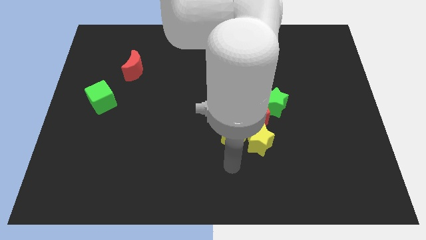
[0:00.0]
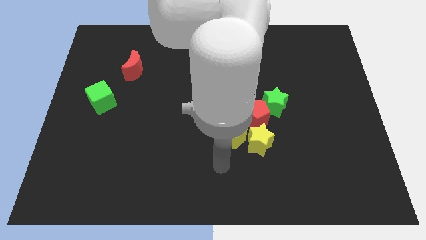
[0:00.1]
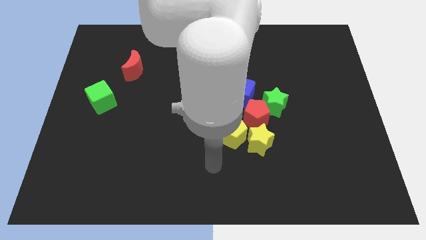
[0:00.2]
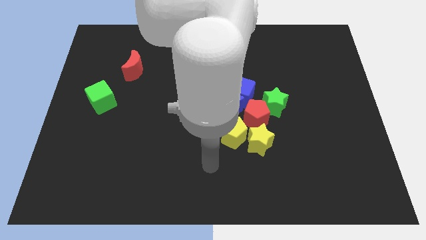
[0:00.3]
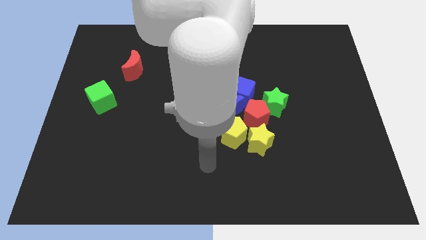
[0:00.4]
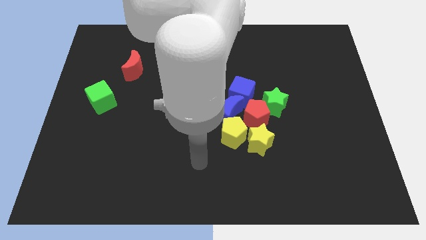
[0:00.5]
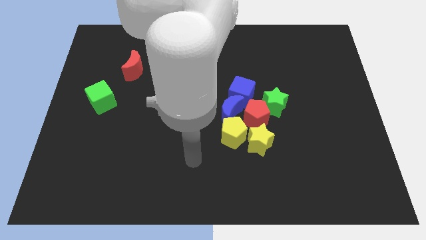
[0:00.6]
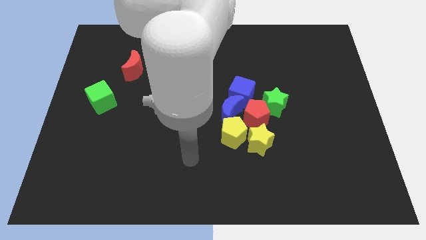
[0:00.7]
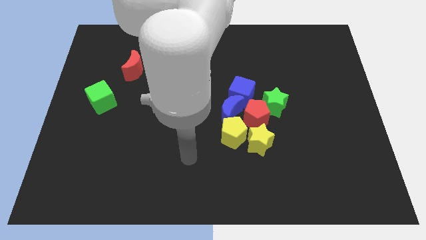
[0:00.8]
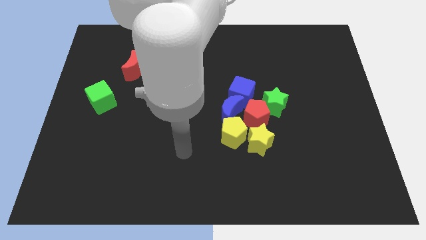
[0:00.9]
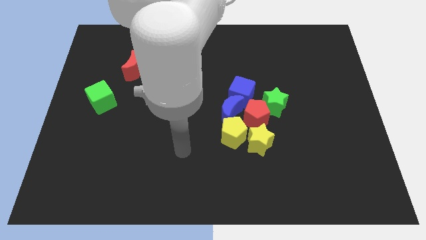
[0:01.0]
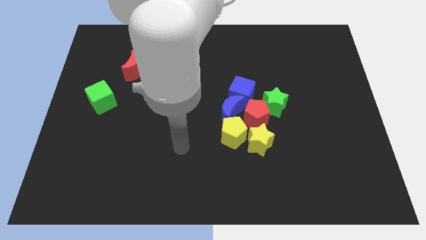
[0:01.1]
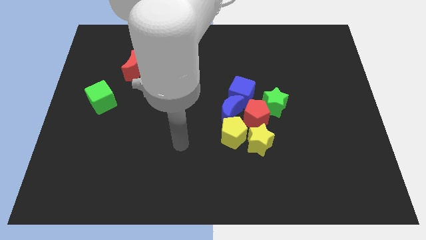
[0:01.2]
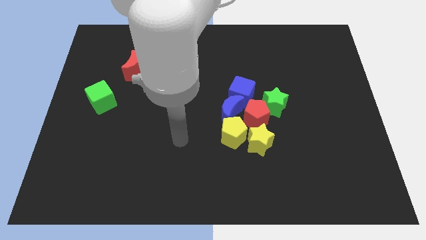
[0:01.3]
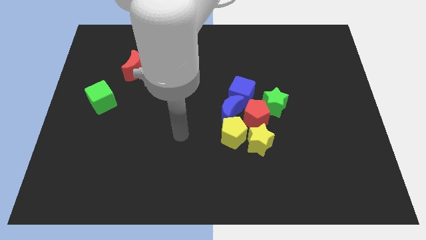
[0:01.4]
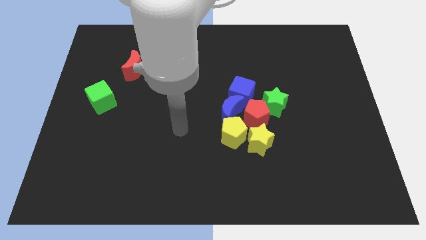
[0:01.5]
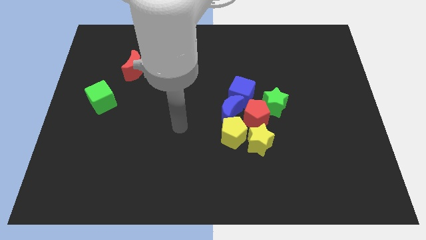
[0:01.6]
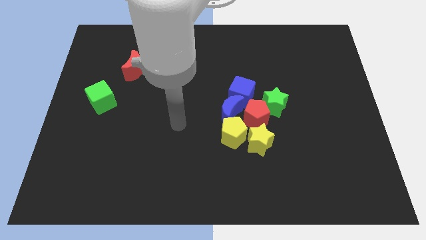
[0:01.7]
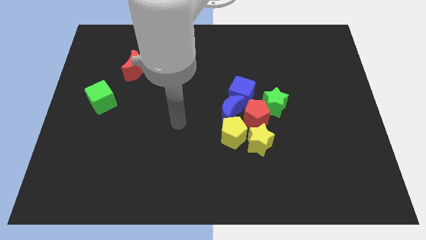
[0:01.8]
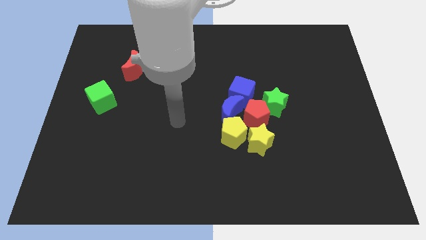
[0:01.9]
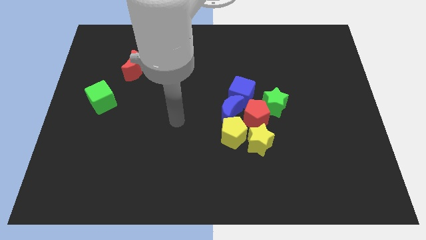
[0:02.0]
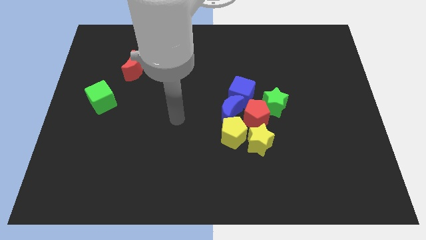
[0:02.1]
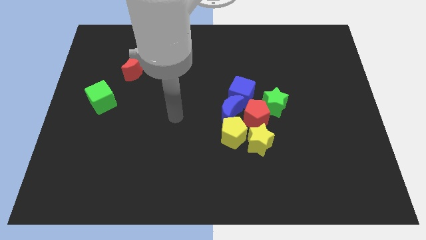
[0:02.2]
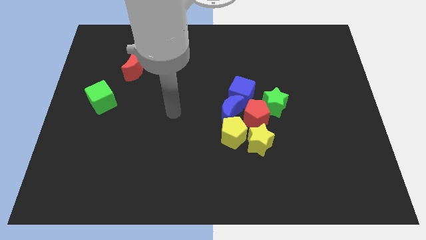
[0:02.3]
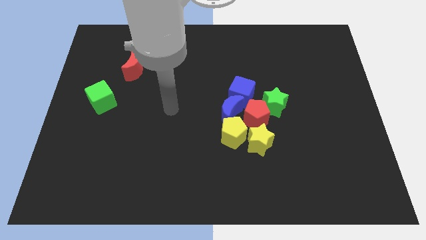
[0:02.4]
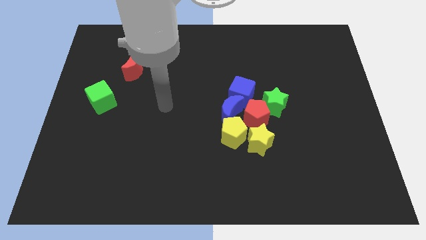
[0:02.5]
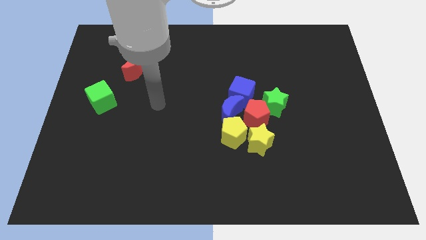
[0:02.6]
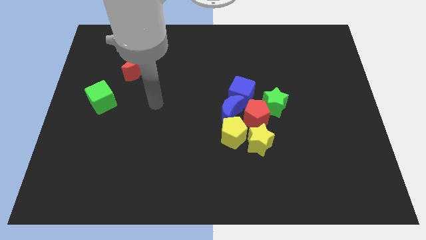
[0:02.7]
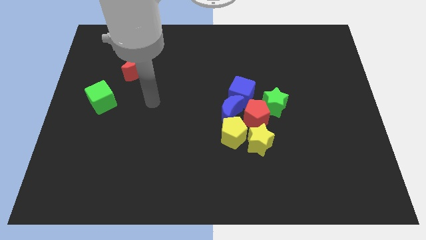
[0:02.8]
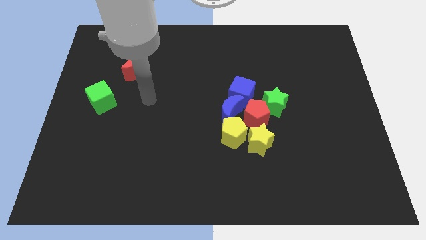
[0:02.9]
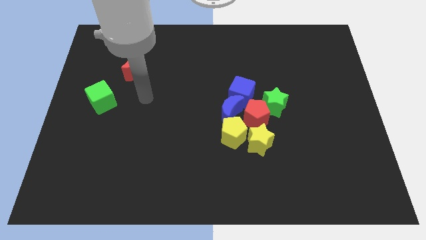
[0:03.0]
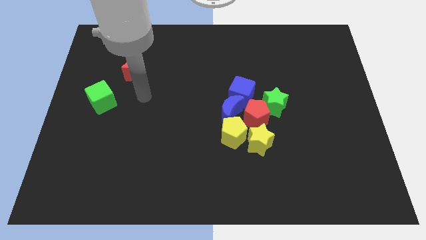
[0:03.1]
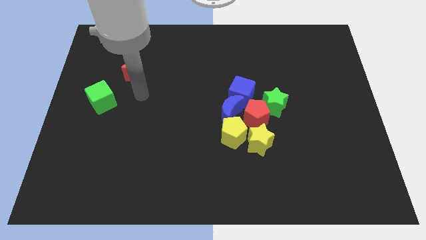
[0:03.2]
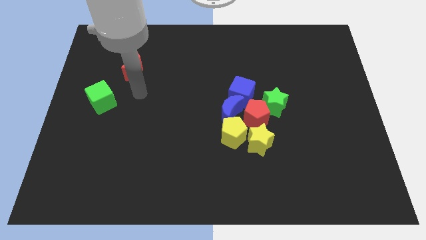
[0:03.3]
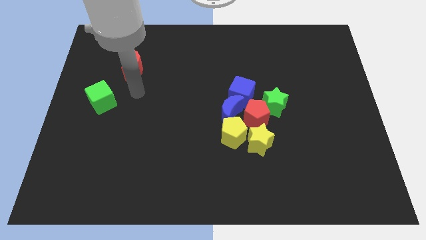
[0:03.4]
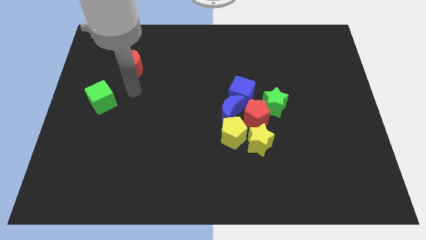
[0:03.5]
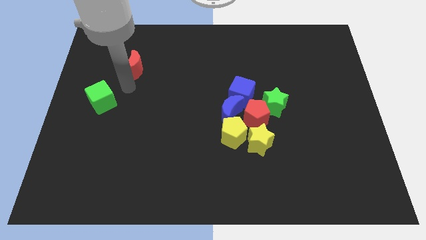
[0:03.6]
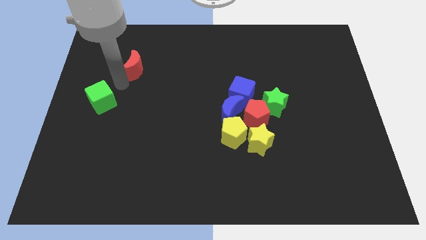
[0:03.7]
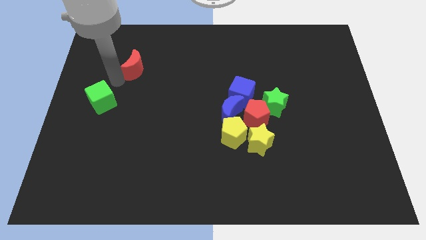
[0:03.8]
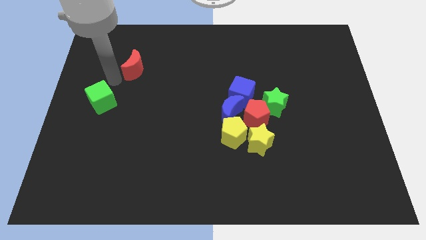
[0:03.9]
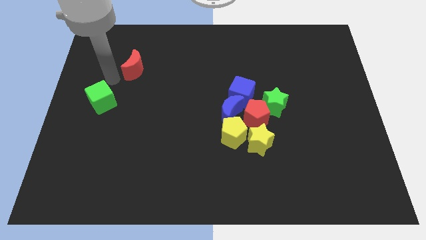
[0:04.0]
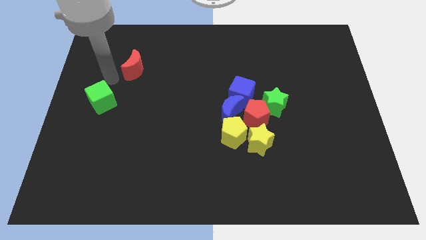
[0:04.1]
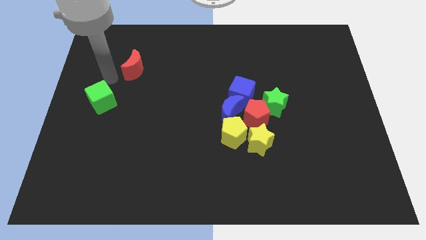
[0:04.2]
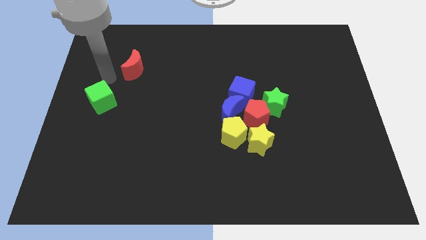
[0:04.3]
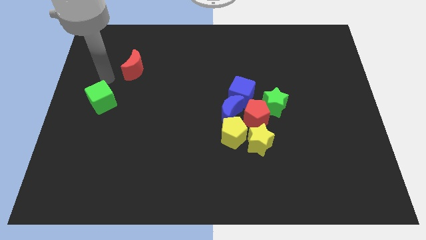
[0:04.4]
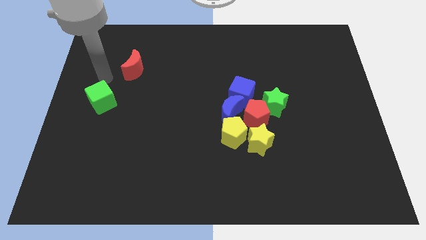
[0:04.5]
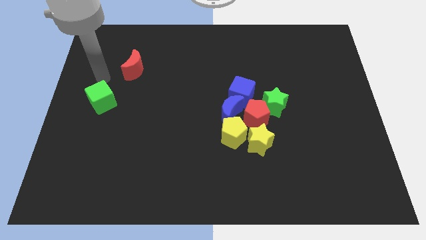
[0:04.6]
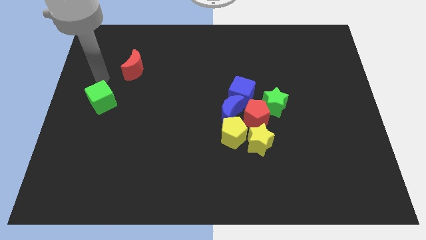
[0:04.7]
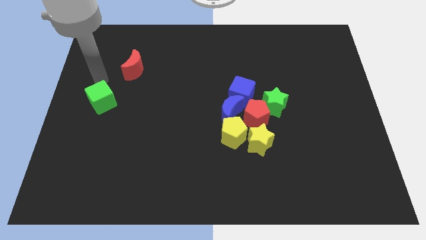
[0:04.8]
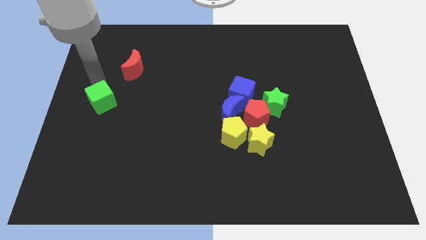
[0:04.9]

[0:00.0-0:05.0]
point your arm above green cube

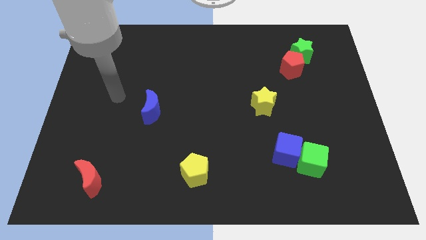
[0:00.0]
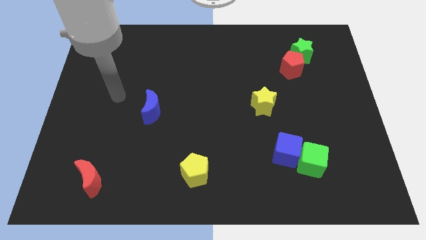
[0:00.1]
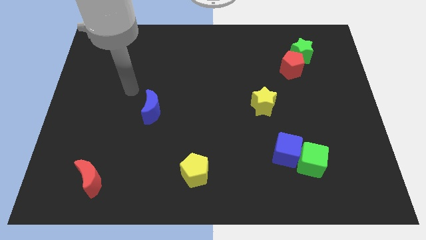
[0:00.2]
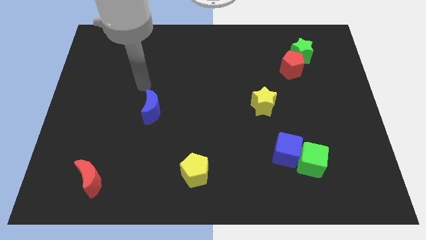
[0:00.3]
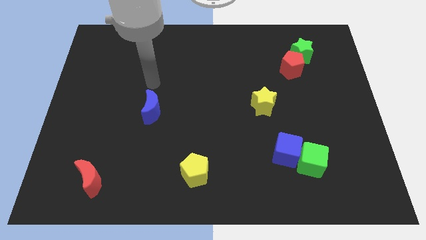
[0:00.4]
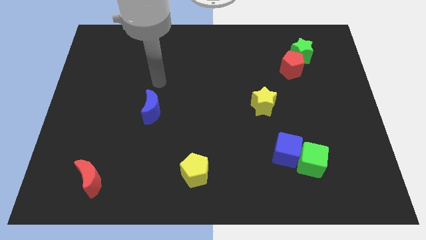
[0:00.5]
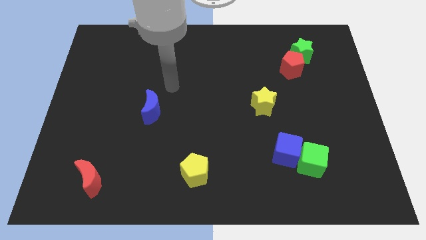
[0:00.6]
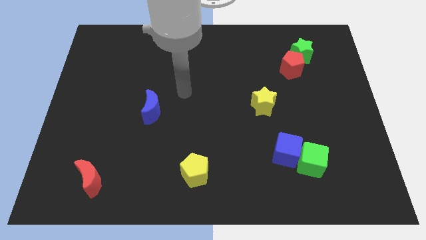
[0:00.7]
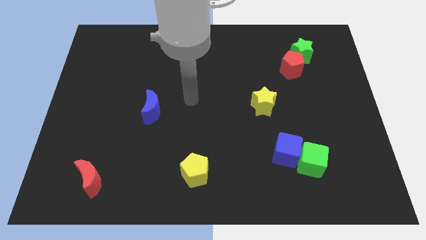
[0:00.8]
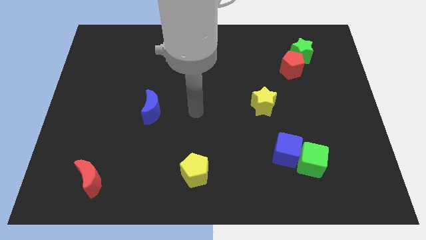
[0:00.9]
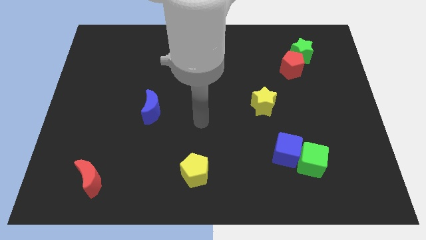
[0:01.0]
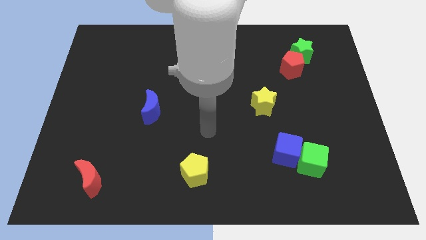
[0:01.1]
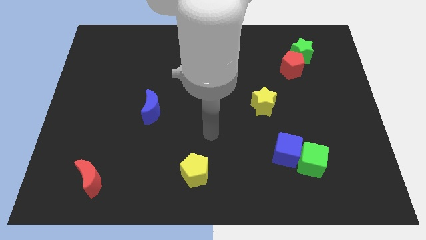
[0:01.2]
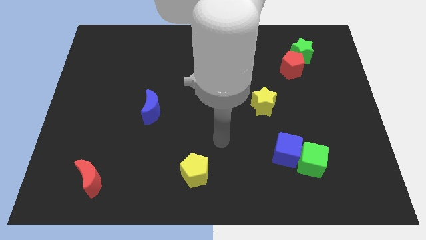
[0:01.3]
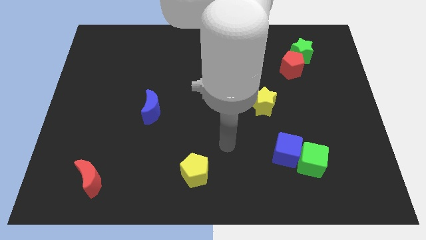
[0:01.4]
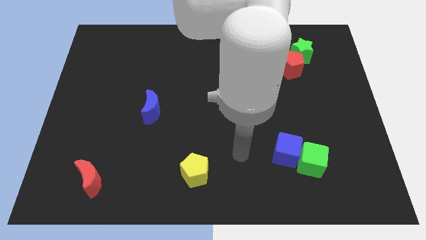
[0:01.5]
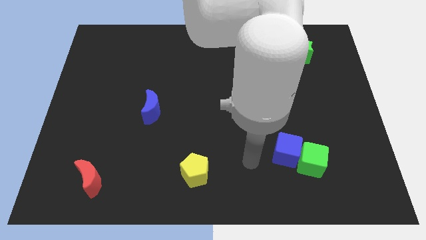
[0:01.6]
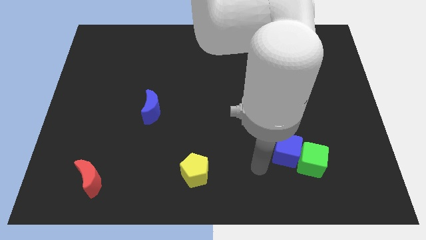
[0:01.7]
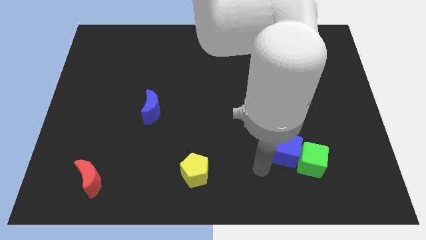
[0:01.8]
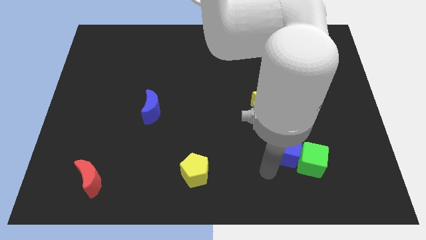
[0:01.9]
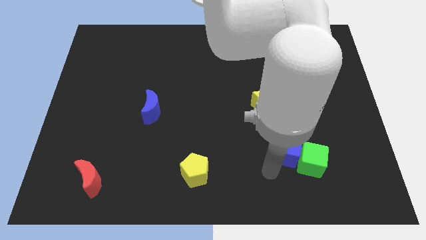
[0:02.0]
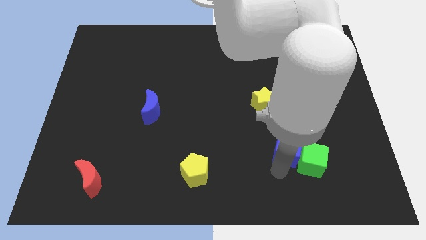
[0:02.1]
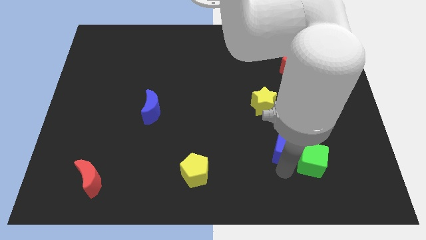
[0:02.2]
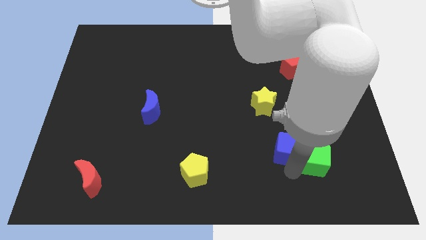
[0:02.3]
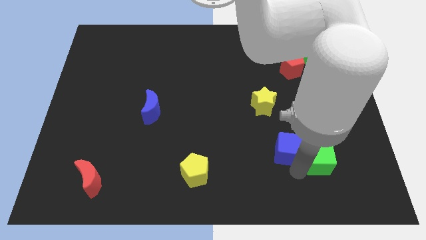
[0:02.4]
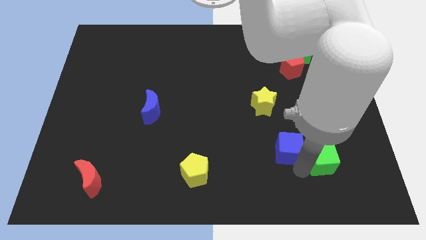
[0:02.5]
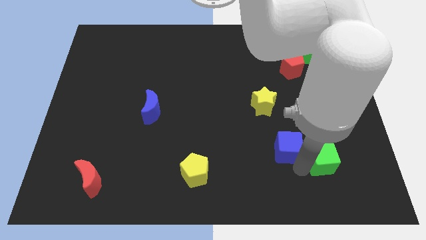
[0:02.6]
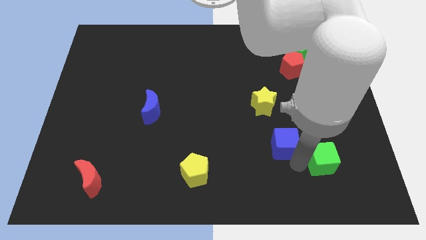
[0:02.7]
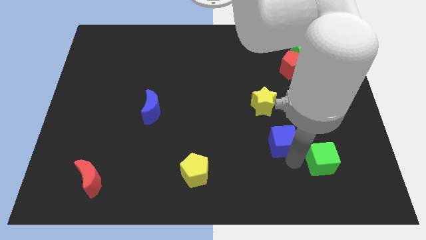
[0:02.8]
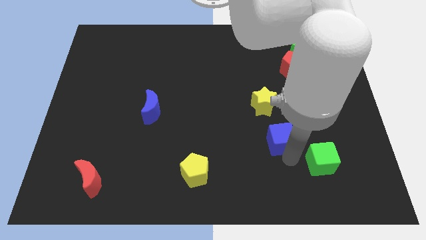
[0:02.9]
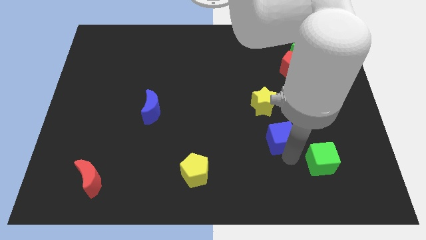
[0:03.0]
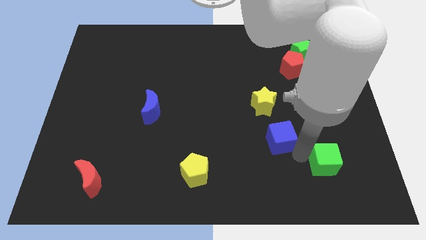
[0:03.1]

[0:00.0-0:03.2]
separate blue cube from green cube

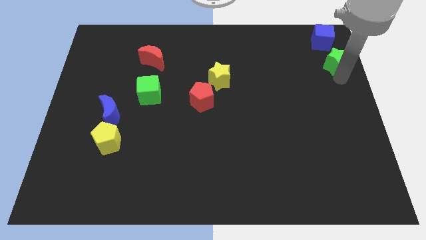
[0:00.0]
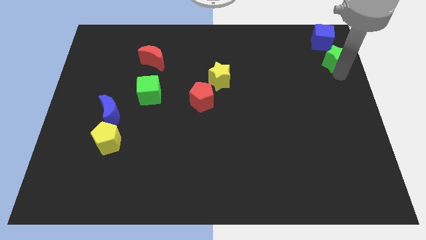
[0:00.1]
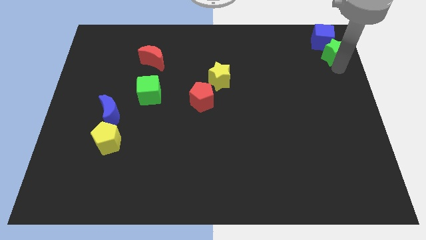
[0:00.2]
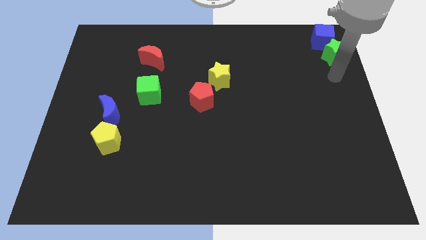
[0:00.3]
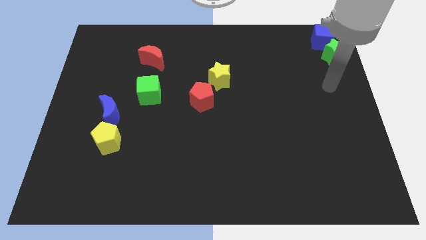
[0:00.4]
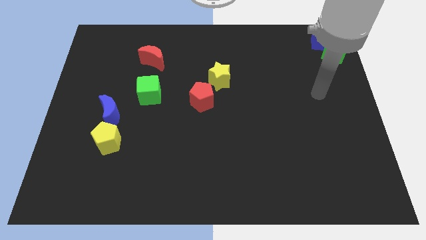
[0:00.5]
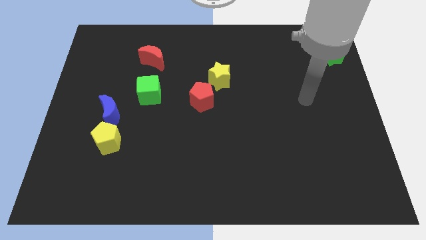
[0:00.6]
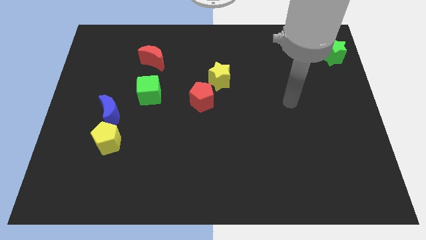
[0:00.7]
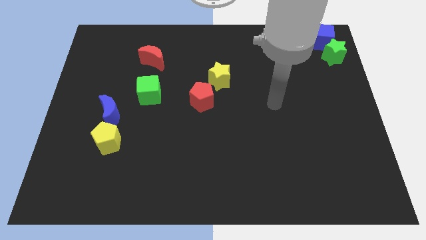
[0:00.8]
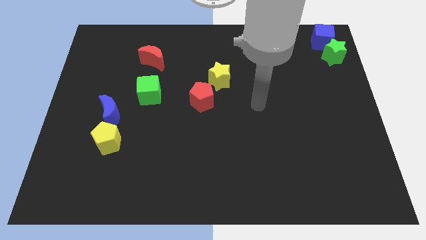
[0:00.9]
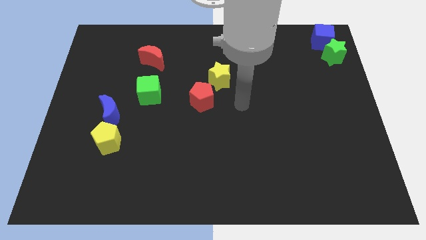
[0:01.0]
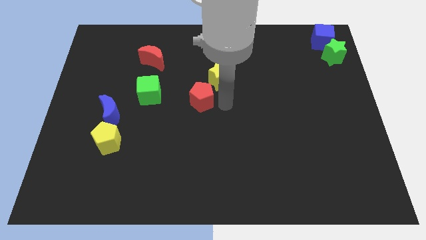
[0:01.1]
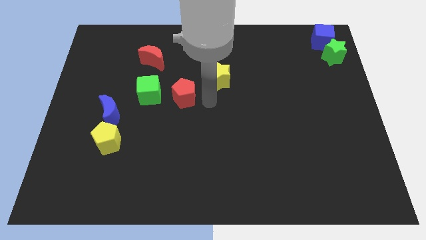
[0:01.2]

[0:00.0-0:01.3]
push the green star into the blue cube
